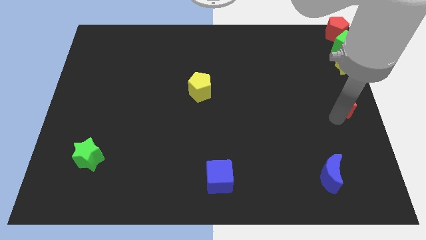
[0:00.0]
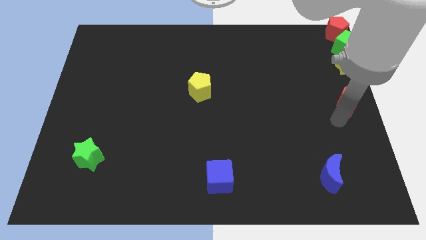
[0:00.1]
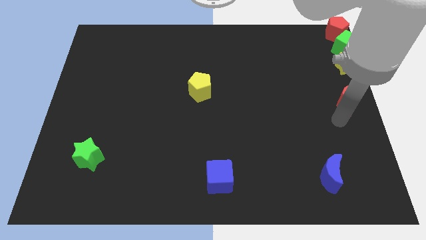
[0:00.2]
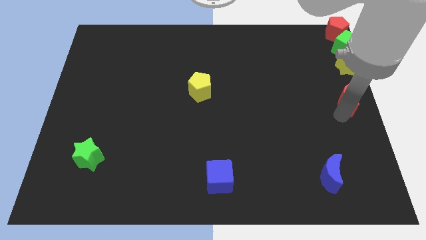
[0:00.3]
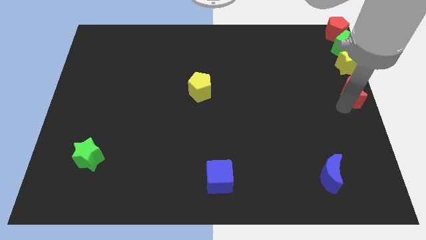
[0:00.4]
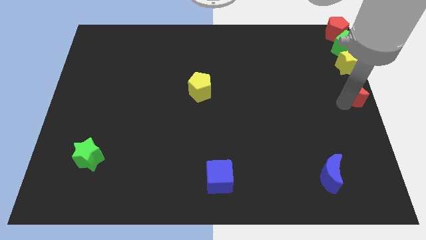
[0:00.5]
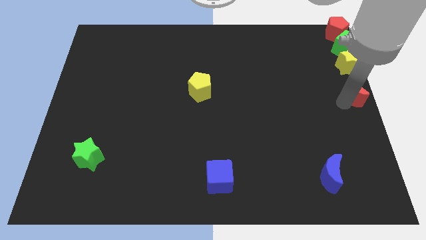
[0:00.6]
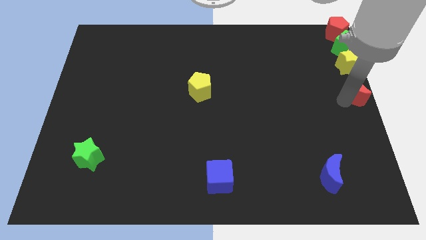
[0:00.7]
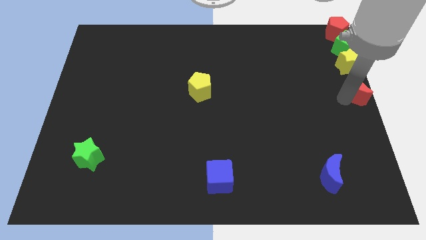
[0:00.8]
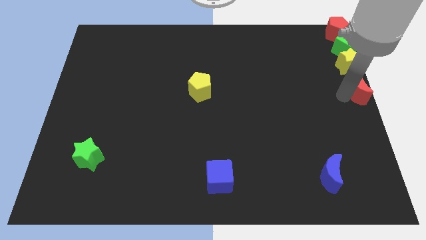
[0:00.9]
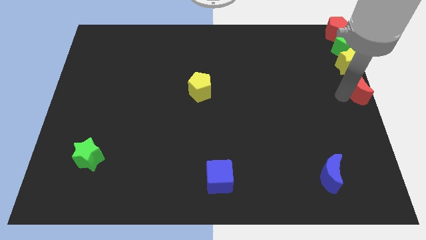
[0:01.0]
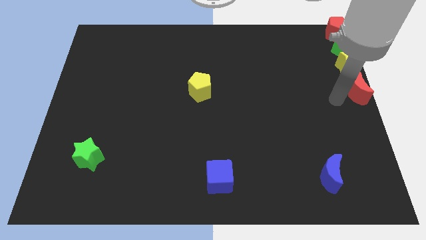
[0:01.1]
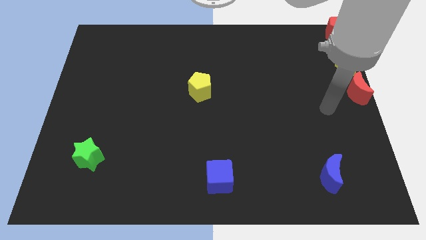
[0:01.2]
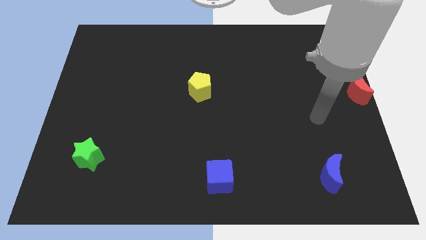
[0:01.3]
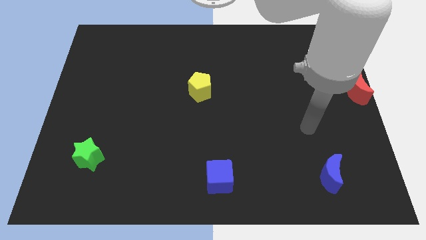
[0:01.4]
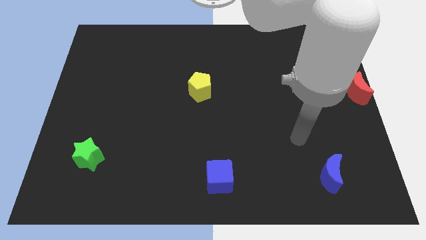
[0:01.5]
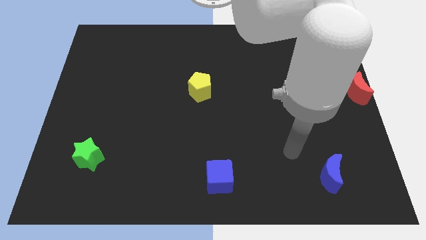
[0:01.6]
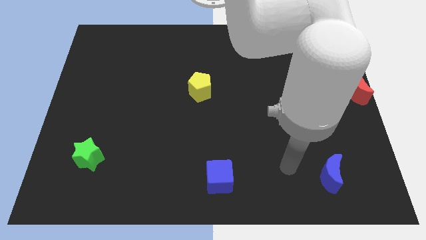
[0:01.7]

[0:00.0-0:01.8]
slide the red moon to the center right side of the board

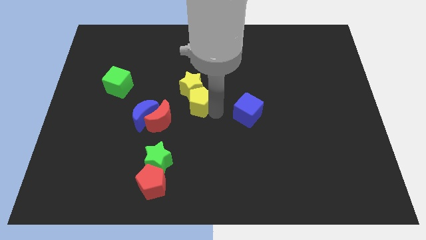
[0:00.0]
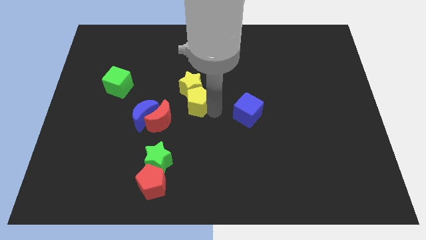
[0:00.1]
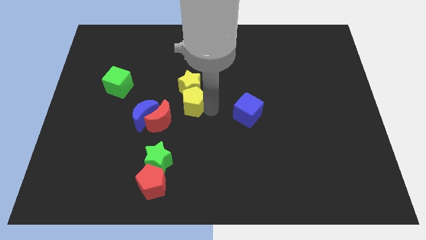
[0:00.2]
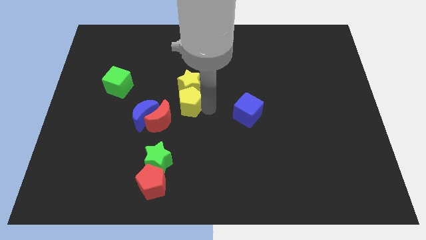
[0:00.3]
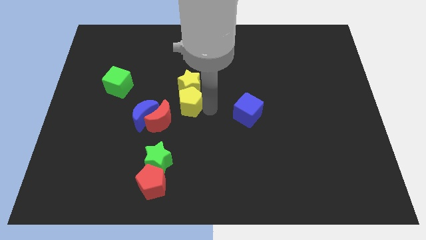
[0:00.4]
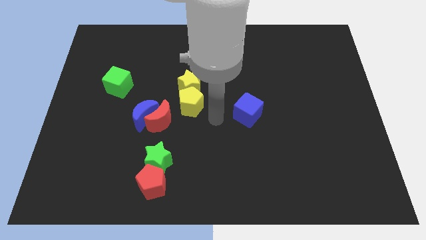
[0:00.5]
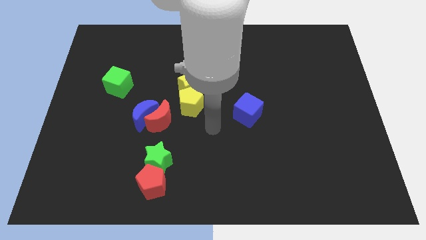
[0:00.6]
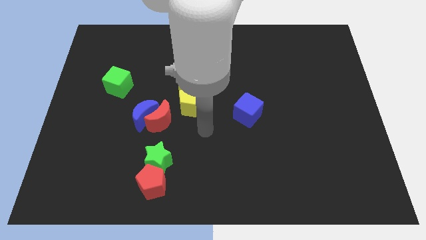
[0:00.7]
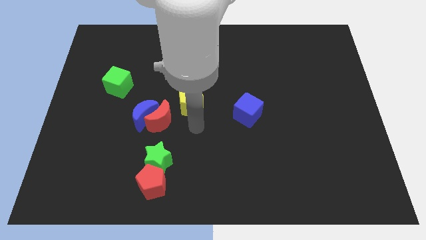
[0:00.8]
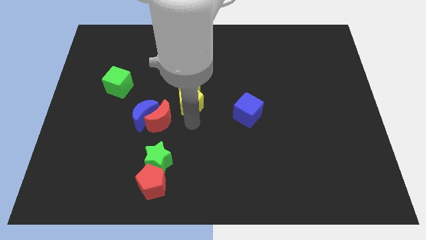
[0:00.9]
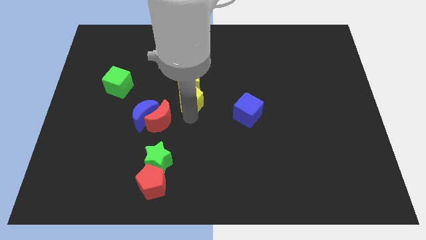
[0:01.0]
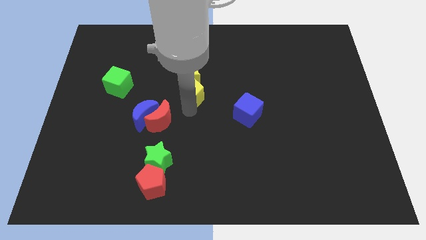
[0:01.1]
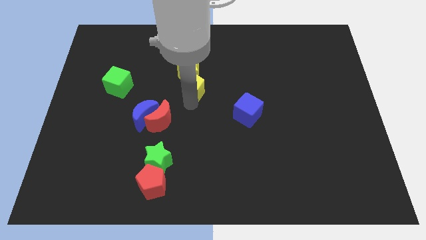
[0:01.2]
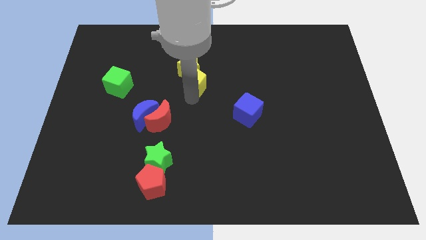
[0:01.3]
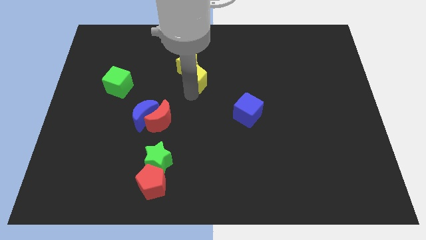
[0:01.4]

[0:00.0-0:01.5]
move the yellow blocks towards the top

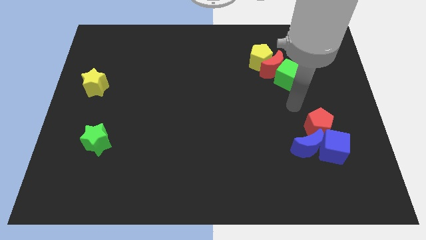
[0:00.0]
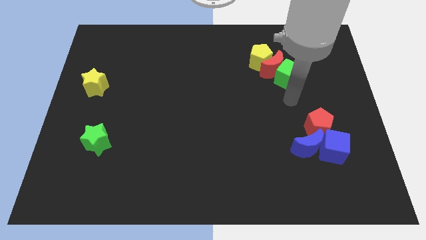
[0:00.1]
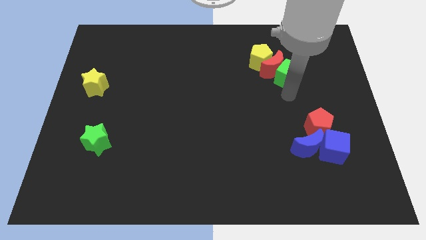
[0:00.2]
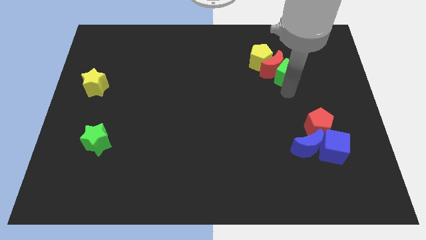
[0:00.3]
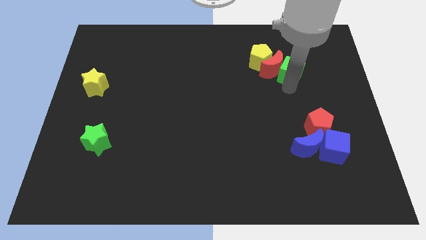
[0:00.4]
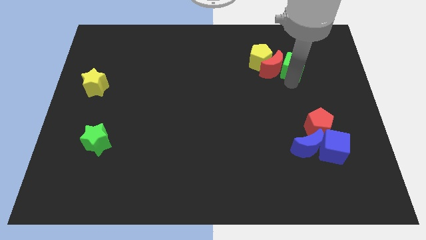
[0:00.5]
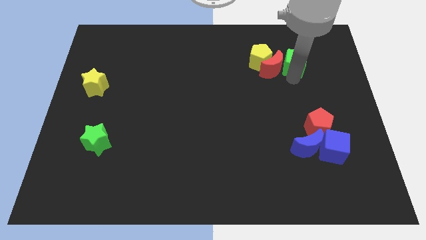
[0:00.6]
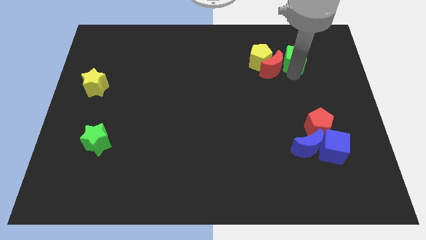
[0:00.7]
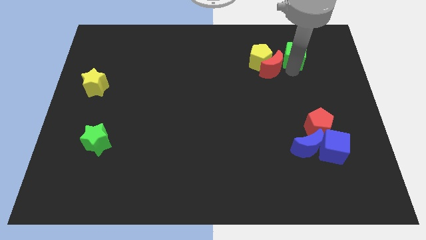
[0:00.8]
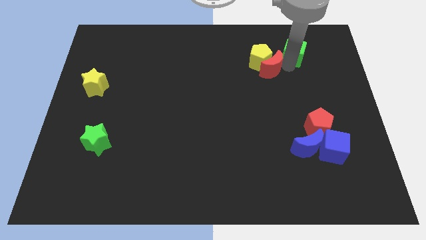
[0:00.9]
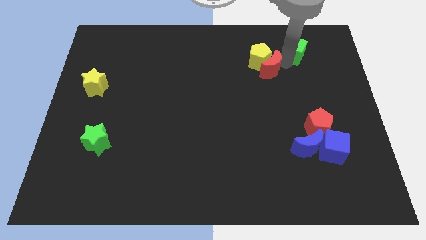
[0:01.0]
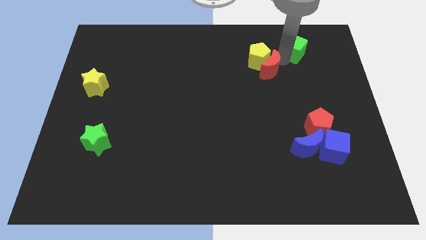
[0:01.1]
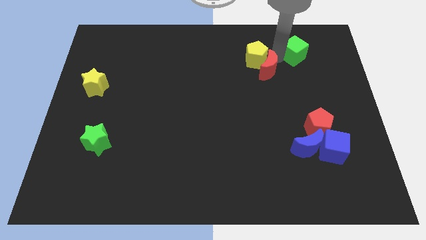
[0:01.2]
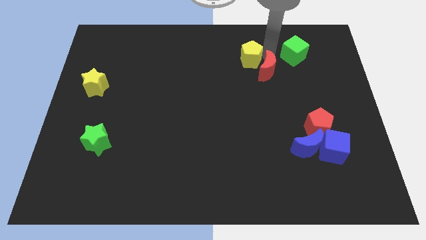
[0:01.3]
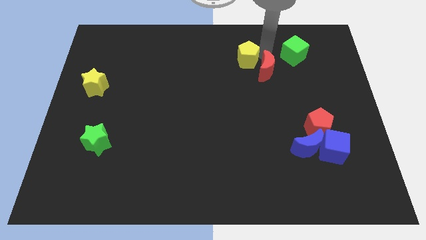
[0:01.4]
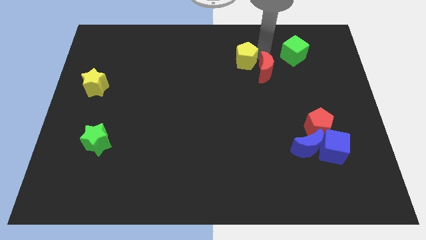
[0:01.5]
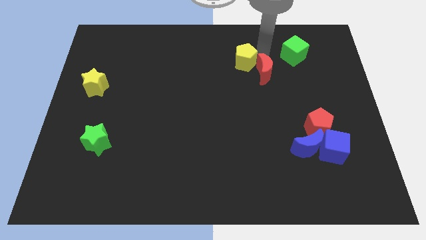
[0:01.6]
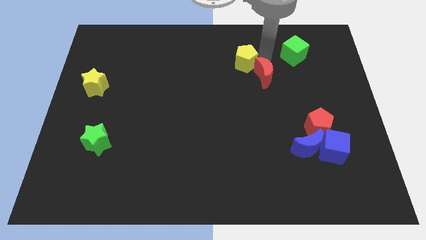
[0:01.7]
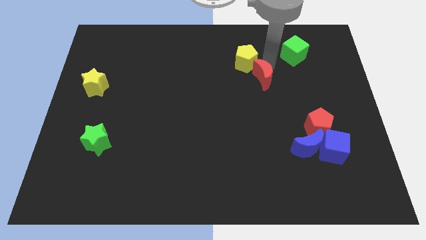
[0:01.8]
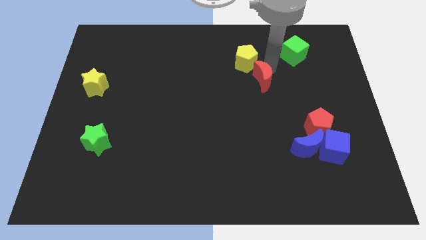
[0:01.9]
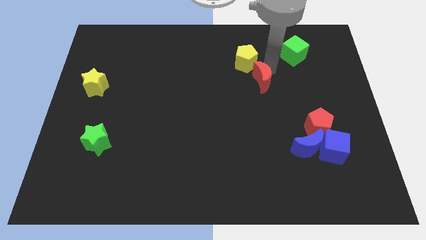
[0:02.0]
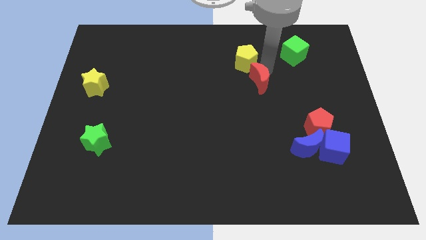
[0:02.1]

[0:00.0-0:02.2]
separate the green cube from red moon and yellow penatgon

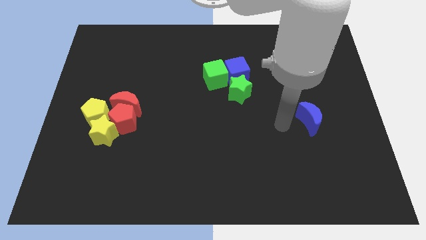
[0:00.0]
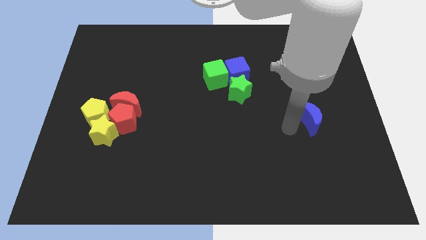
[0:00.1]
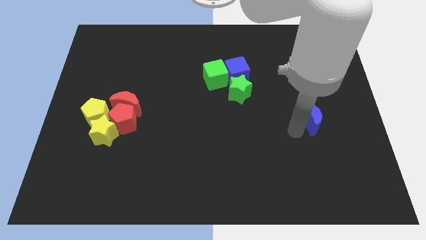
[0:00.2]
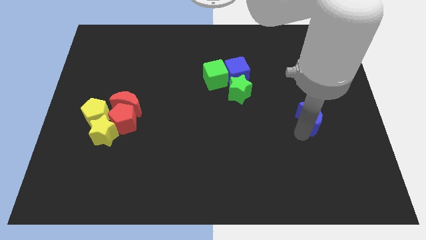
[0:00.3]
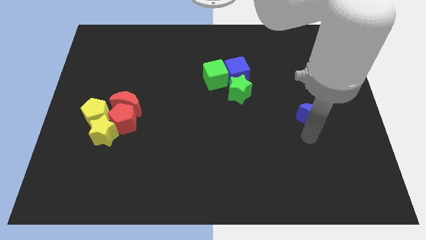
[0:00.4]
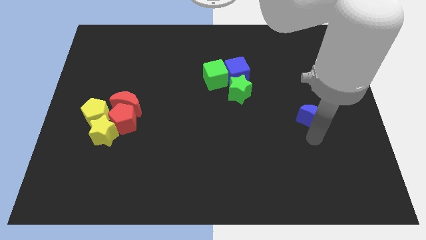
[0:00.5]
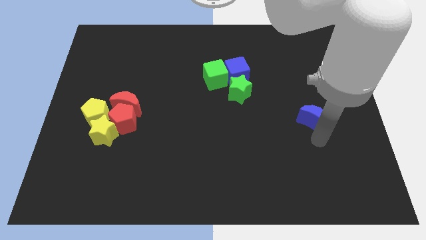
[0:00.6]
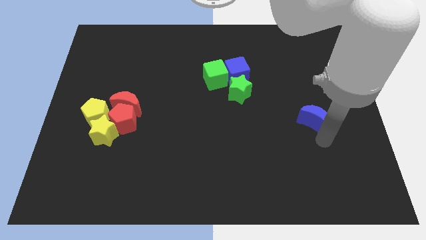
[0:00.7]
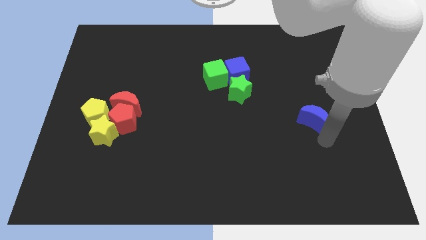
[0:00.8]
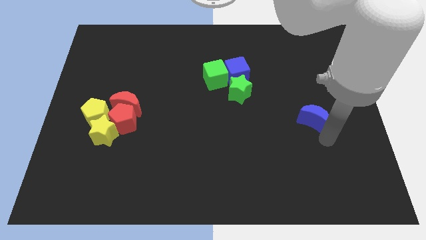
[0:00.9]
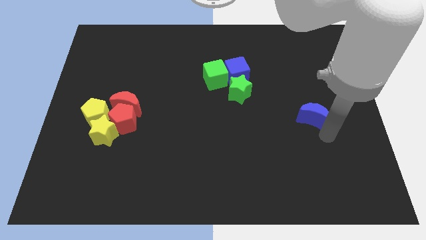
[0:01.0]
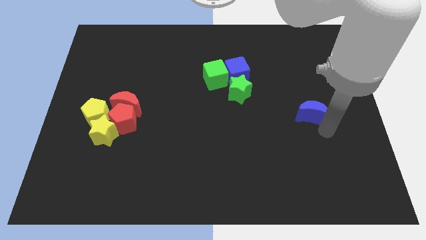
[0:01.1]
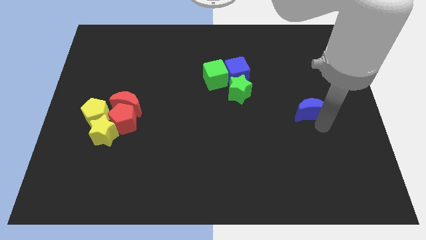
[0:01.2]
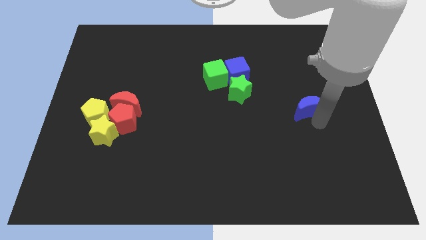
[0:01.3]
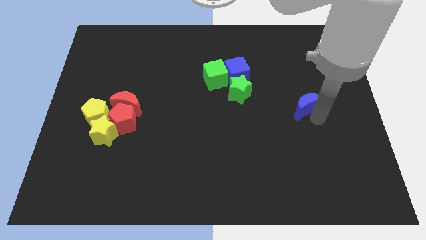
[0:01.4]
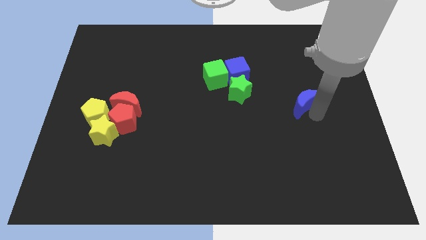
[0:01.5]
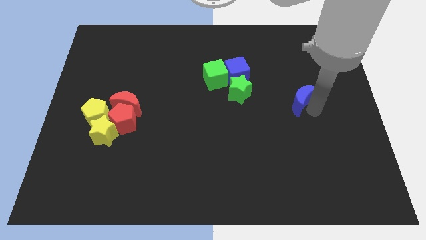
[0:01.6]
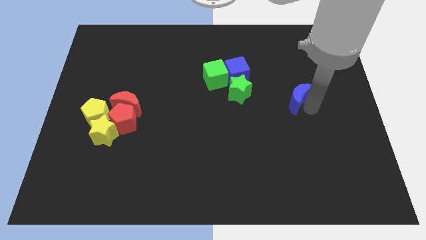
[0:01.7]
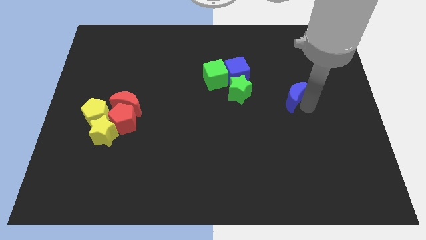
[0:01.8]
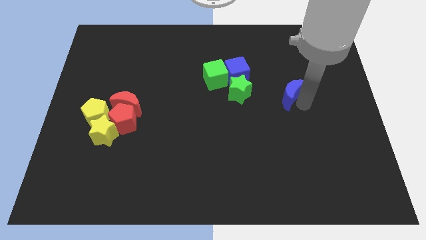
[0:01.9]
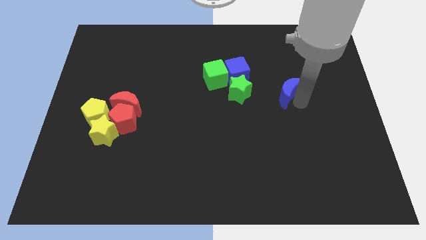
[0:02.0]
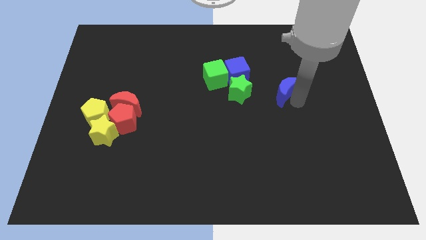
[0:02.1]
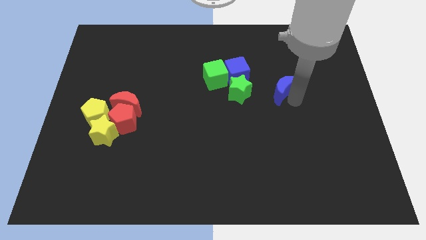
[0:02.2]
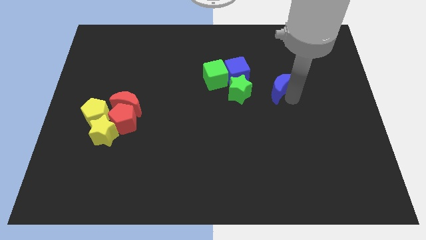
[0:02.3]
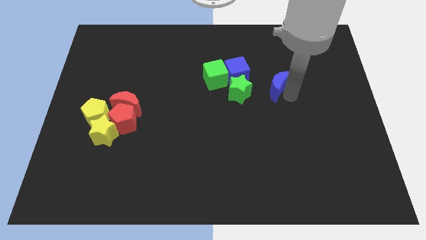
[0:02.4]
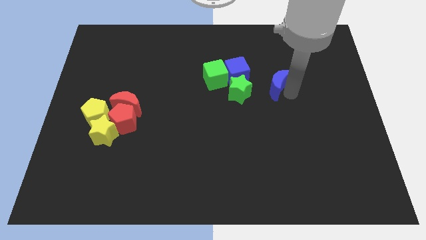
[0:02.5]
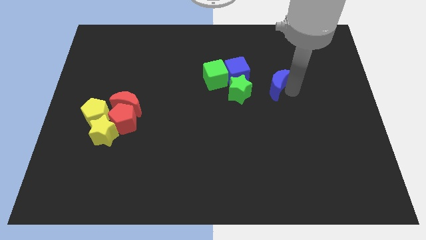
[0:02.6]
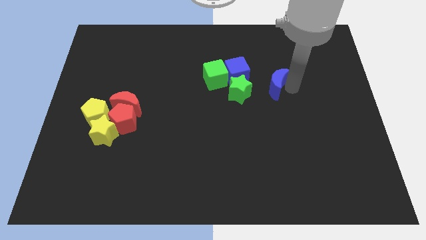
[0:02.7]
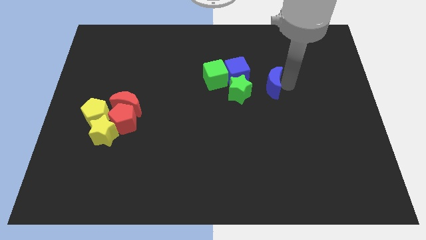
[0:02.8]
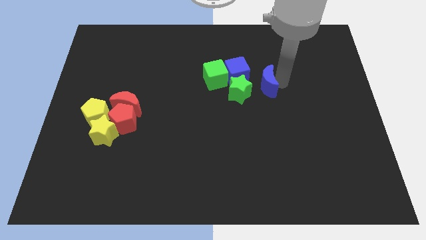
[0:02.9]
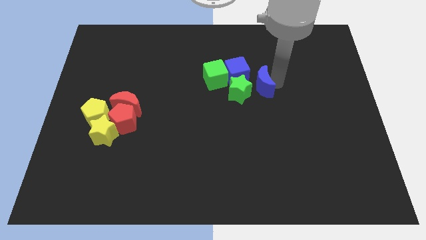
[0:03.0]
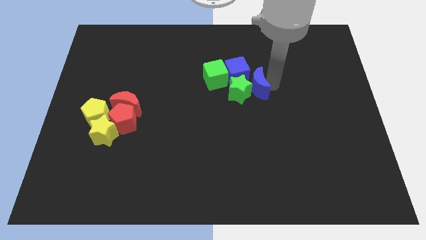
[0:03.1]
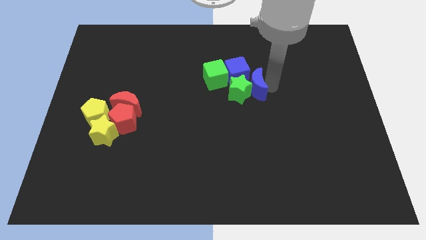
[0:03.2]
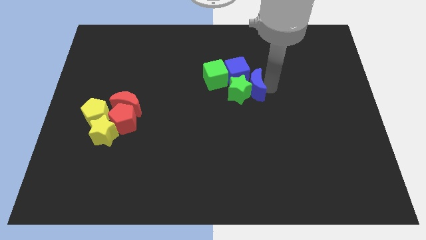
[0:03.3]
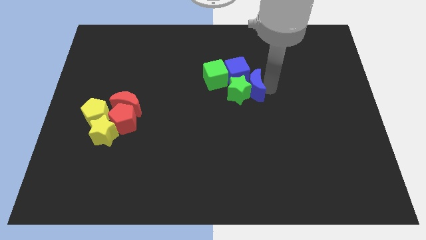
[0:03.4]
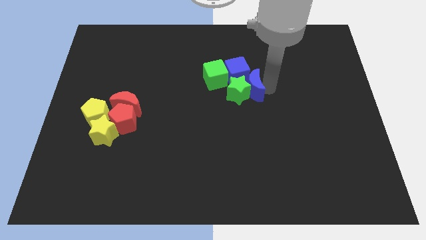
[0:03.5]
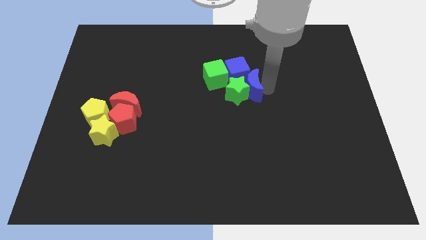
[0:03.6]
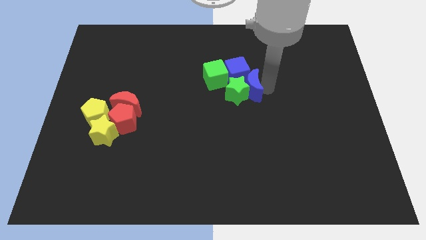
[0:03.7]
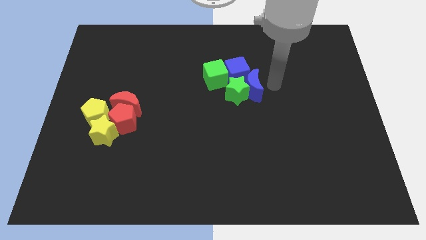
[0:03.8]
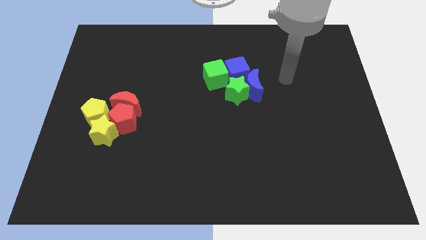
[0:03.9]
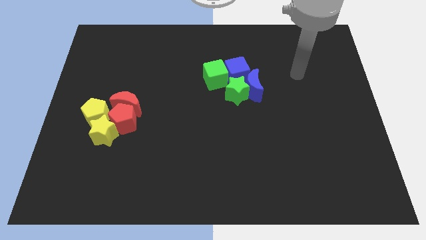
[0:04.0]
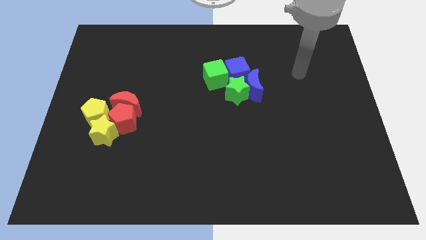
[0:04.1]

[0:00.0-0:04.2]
push the blue crescent into the green star
